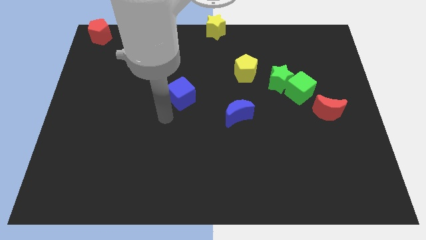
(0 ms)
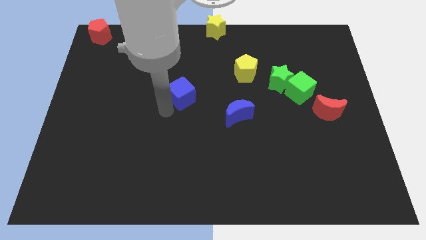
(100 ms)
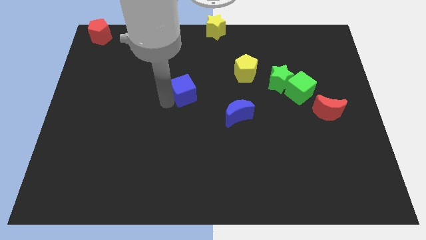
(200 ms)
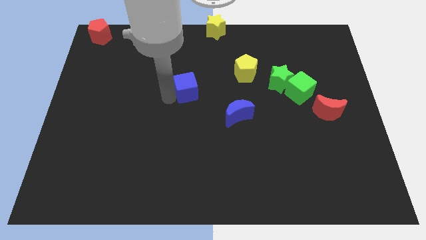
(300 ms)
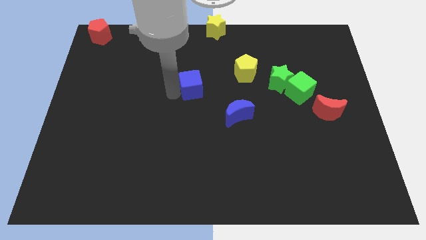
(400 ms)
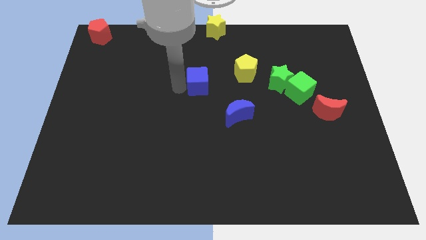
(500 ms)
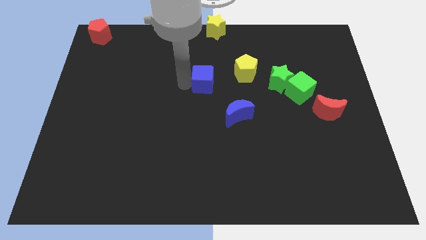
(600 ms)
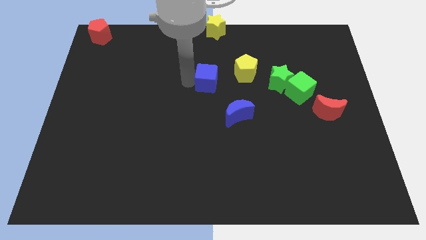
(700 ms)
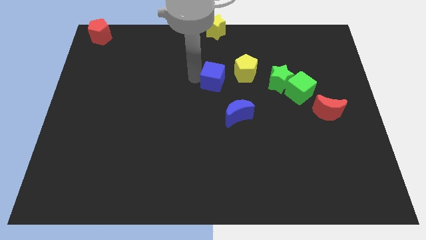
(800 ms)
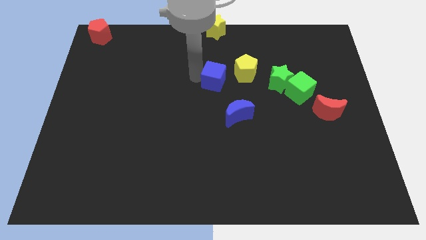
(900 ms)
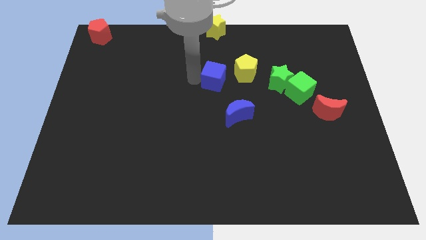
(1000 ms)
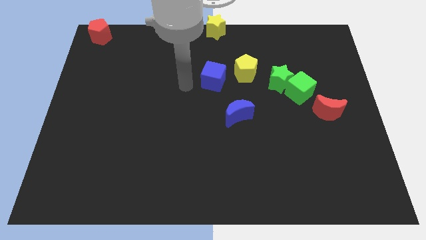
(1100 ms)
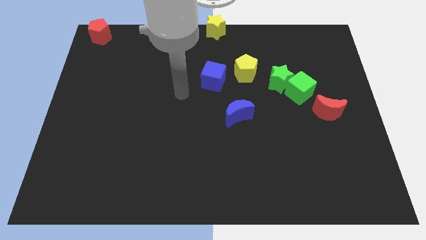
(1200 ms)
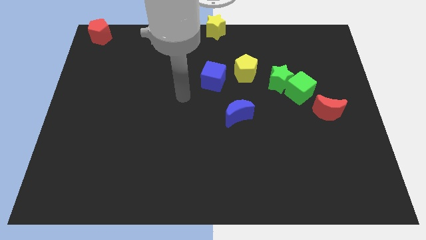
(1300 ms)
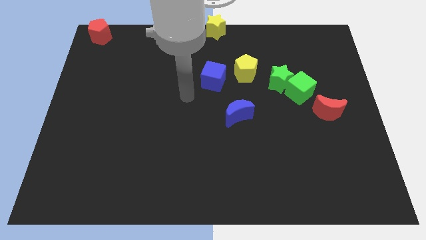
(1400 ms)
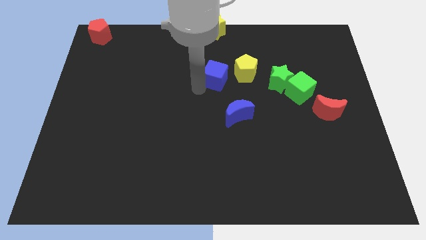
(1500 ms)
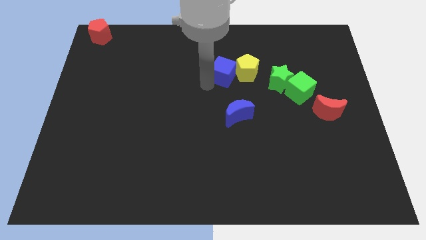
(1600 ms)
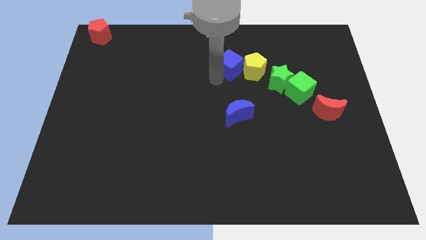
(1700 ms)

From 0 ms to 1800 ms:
push the blue cube left to the yellow pentagon

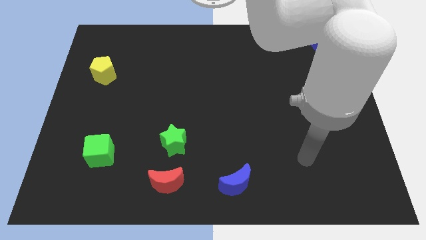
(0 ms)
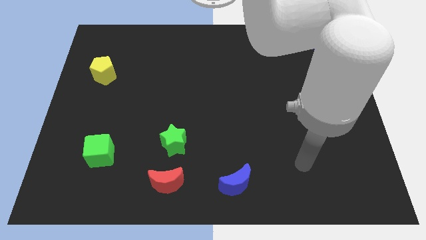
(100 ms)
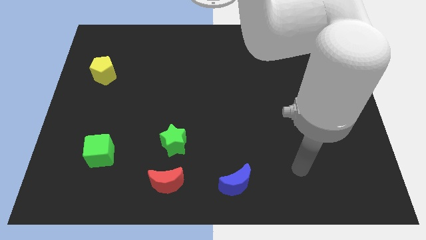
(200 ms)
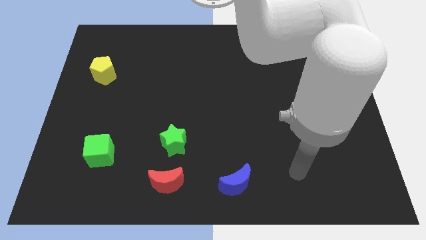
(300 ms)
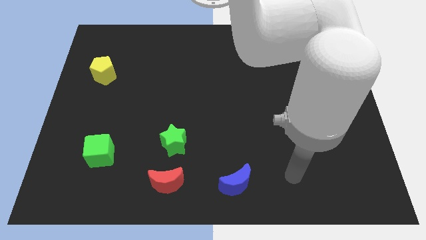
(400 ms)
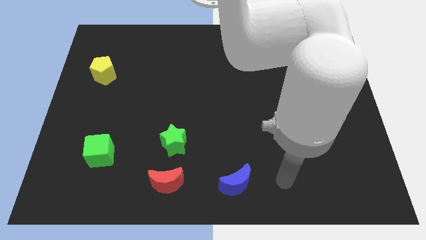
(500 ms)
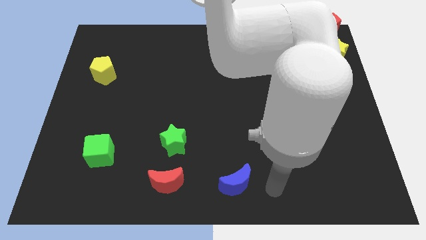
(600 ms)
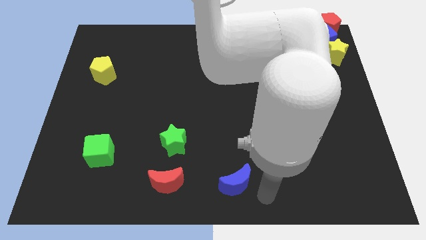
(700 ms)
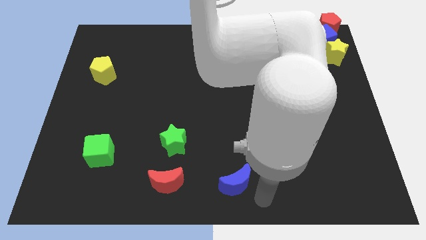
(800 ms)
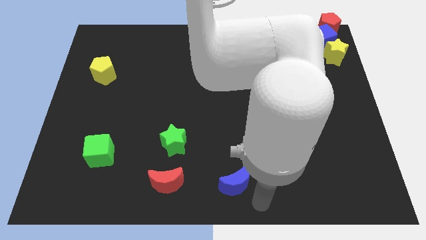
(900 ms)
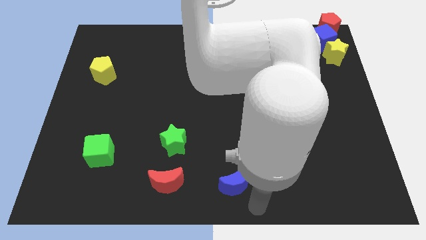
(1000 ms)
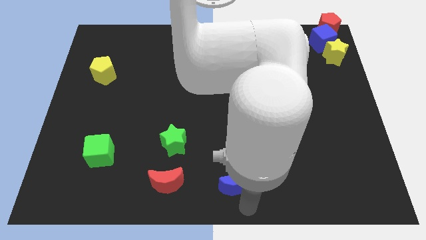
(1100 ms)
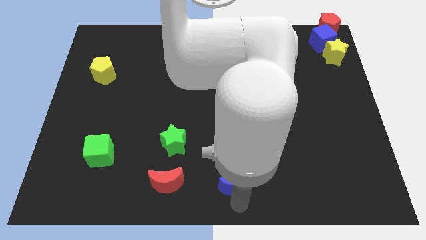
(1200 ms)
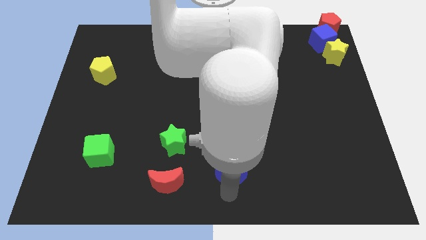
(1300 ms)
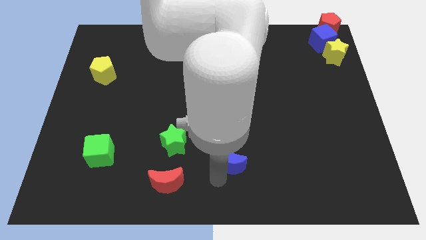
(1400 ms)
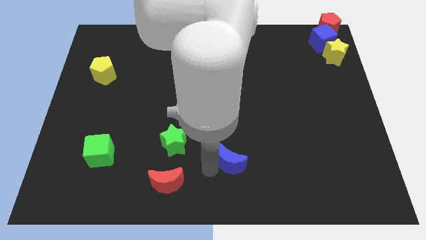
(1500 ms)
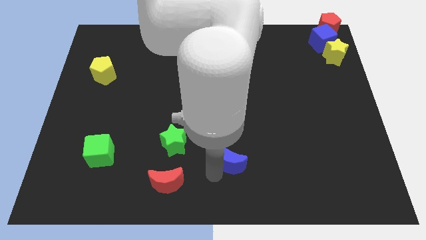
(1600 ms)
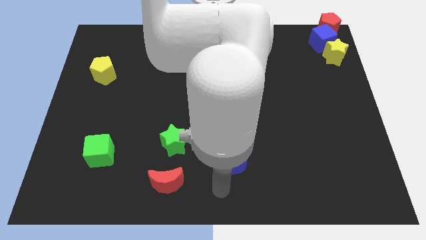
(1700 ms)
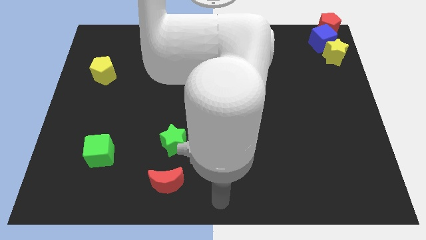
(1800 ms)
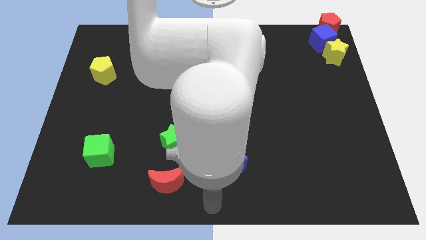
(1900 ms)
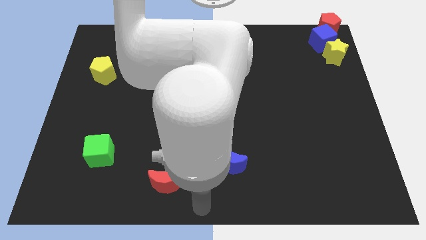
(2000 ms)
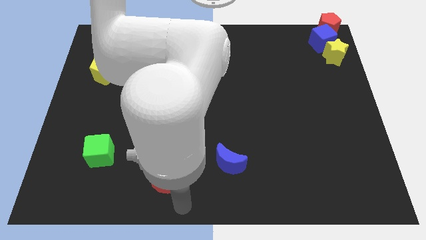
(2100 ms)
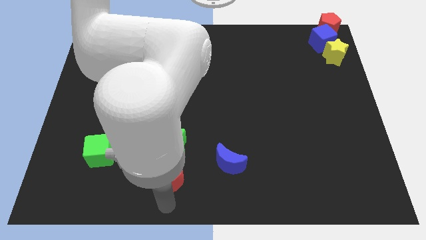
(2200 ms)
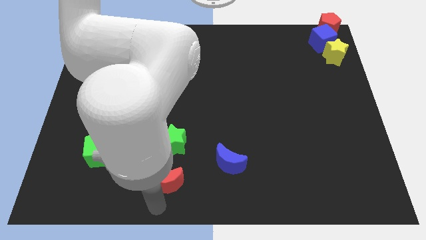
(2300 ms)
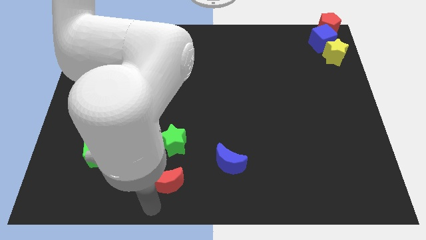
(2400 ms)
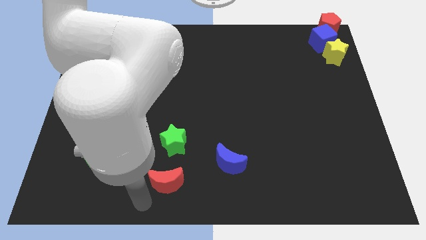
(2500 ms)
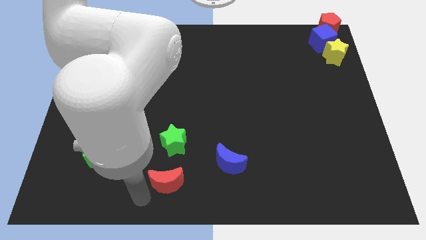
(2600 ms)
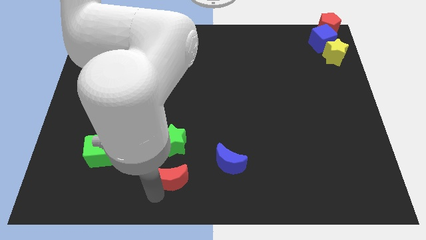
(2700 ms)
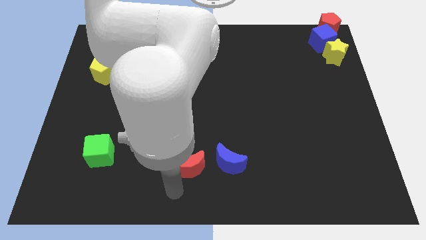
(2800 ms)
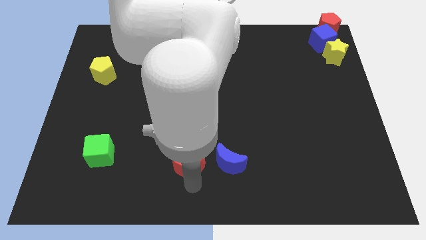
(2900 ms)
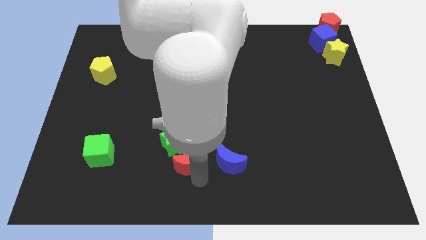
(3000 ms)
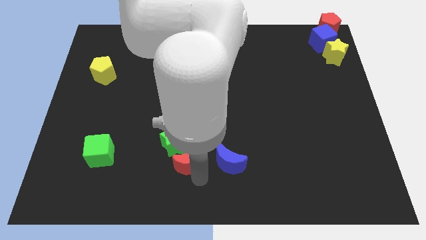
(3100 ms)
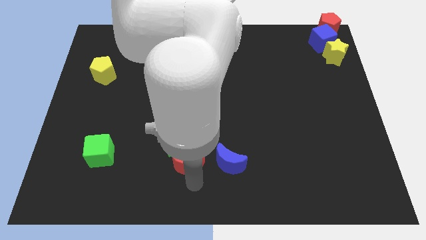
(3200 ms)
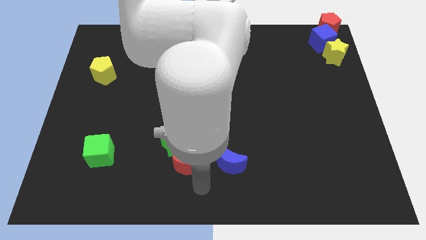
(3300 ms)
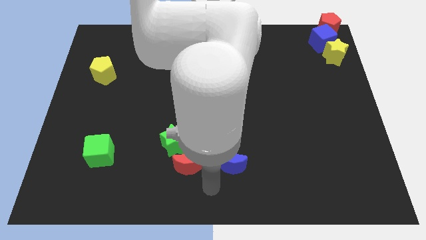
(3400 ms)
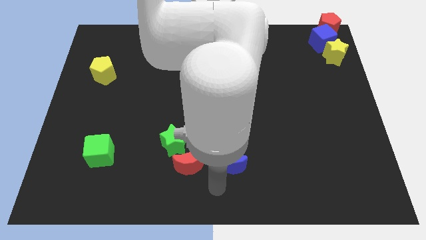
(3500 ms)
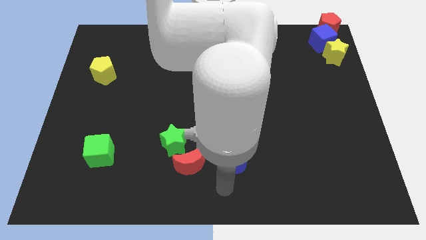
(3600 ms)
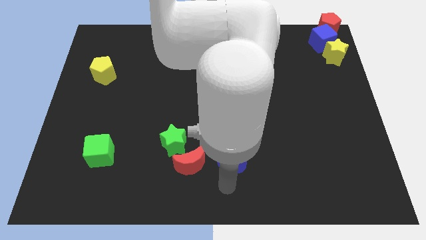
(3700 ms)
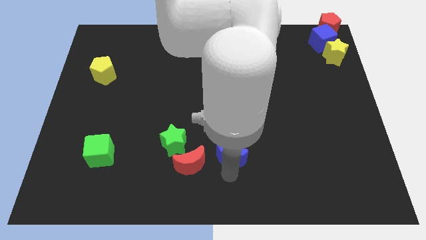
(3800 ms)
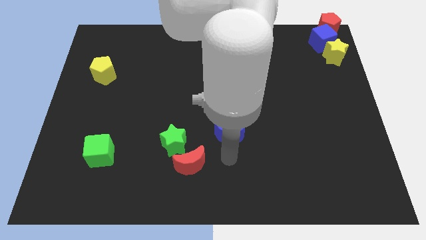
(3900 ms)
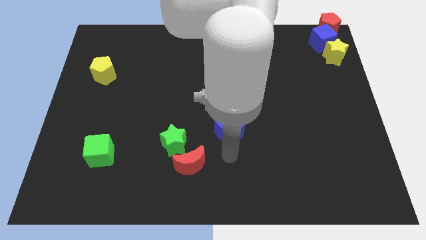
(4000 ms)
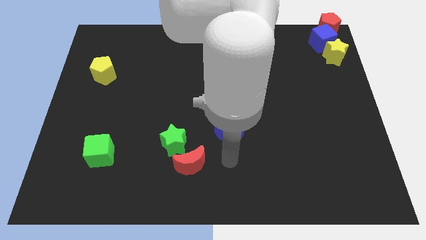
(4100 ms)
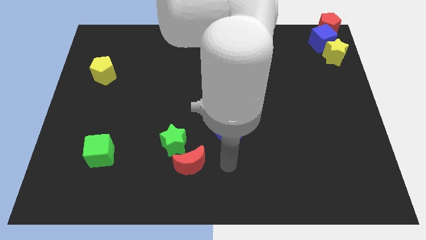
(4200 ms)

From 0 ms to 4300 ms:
move the red moon and the blue moon diagonal to each other

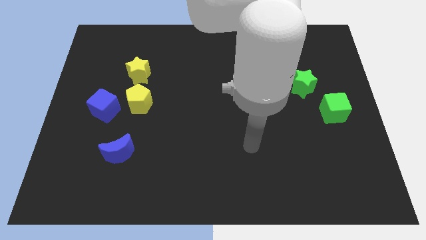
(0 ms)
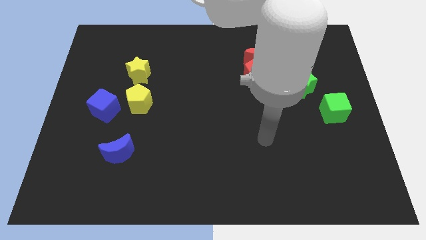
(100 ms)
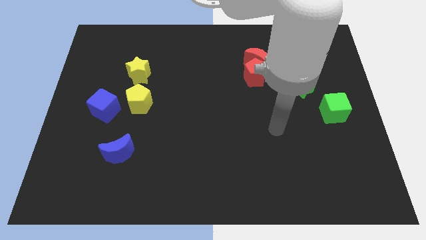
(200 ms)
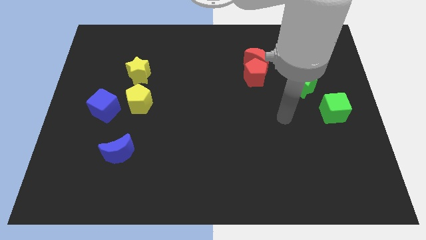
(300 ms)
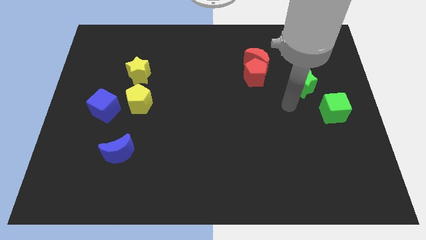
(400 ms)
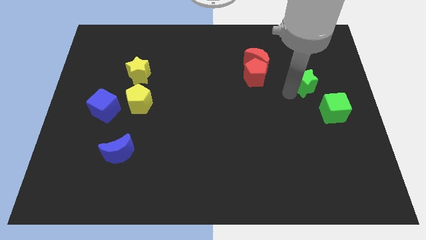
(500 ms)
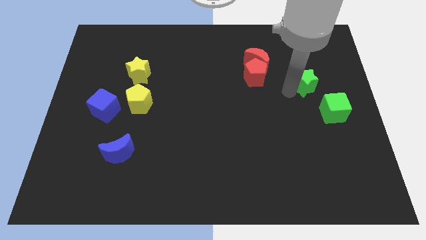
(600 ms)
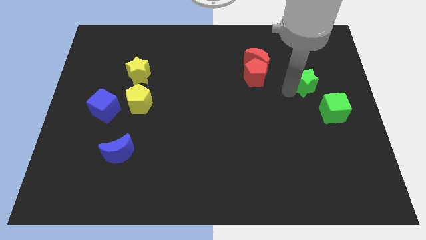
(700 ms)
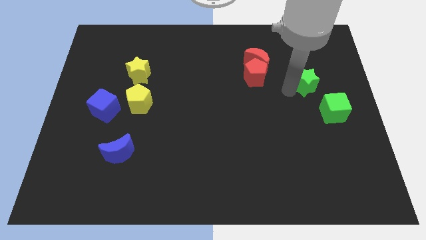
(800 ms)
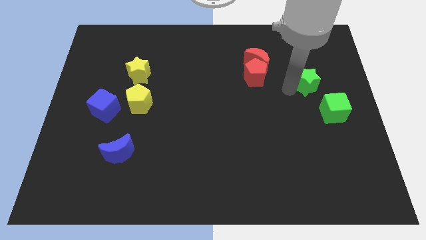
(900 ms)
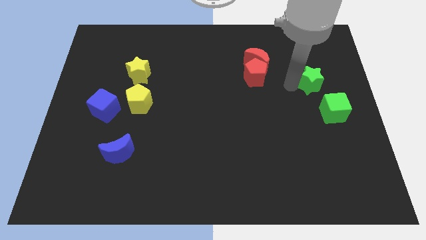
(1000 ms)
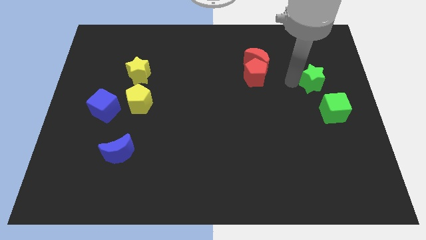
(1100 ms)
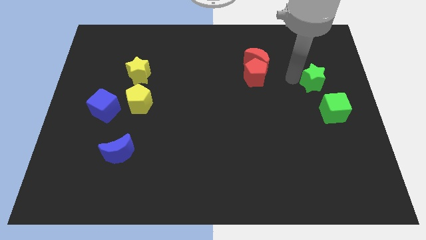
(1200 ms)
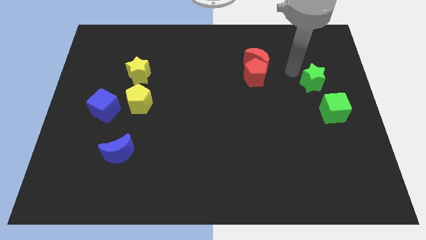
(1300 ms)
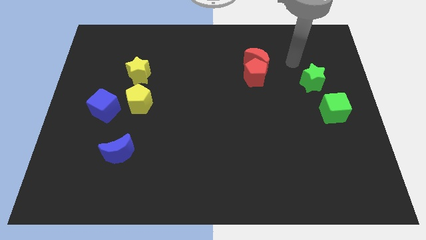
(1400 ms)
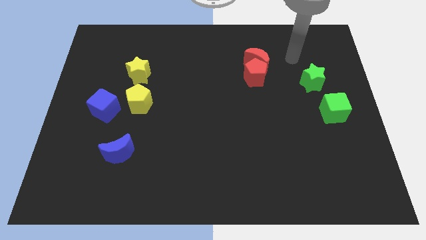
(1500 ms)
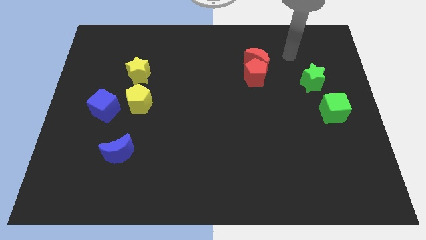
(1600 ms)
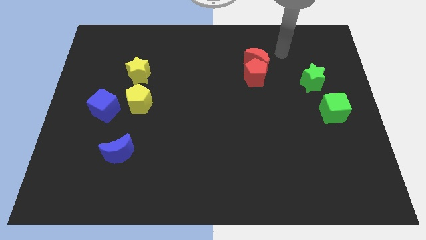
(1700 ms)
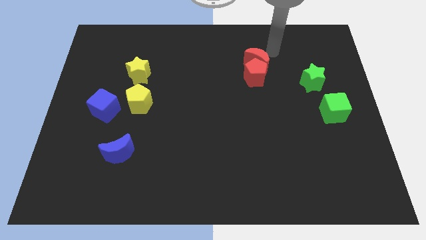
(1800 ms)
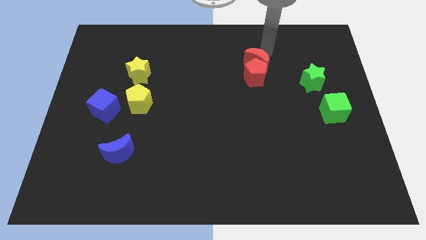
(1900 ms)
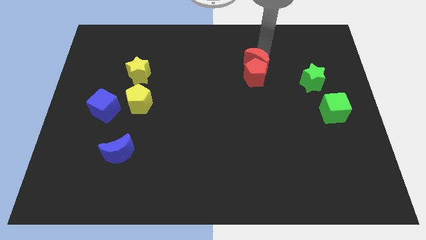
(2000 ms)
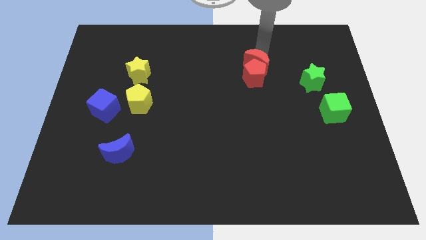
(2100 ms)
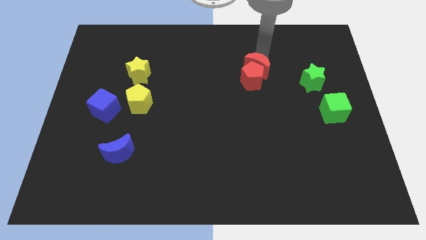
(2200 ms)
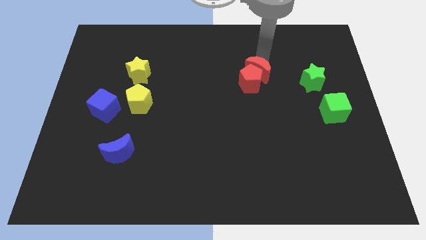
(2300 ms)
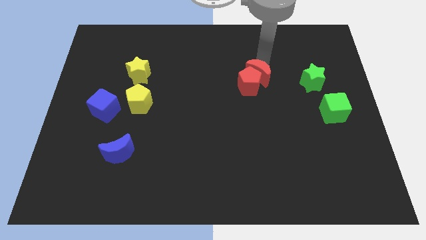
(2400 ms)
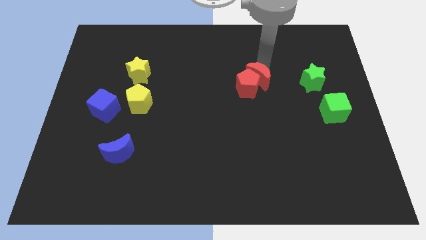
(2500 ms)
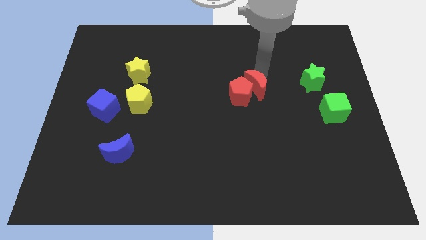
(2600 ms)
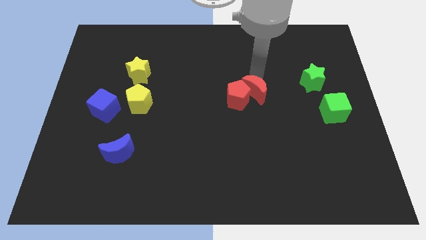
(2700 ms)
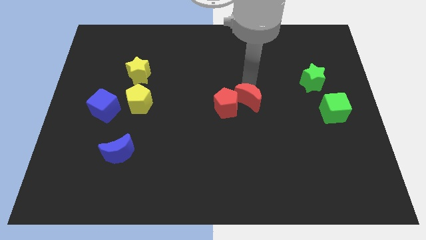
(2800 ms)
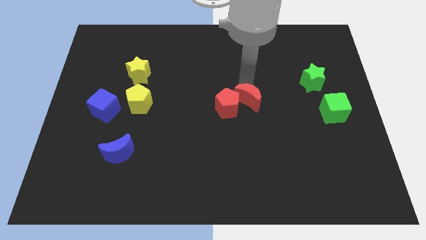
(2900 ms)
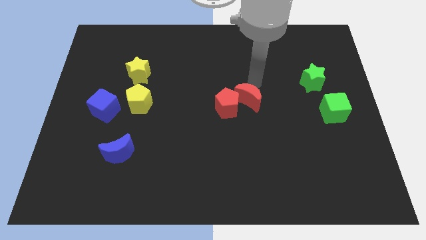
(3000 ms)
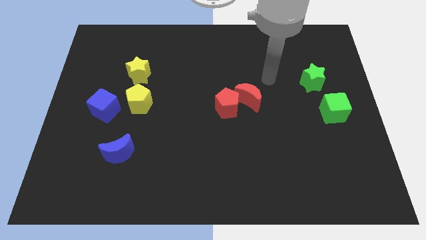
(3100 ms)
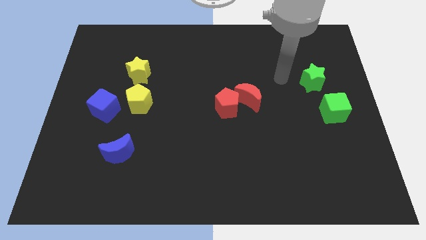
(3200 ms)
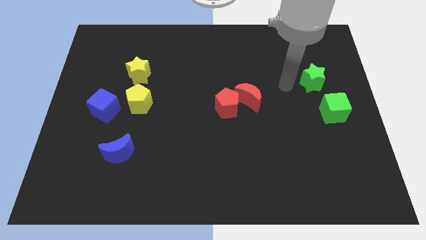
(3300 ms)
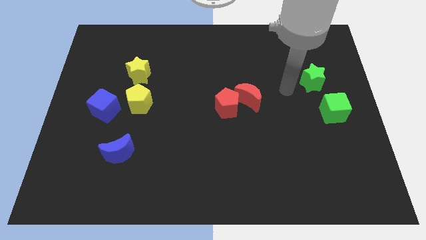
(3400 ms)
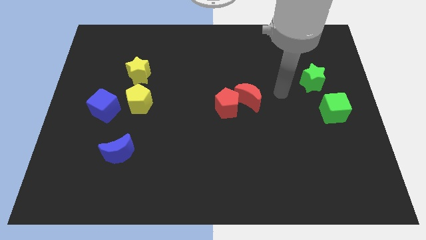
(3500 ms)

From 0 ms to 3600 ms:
push the red blocks slightly to the bottom of the board
